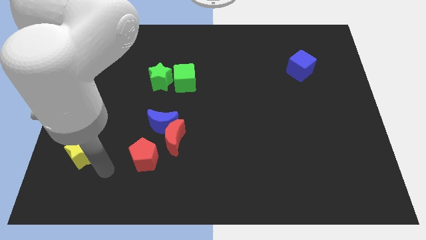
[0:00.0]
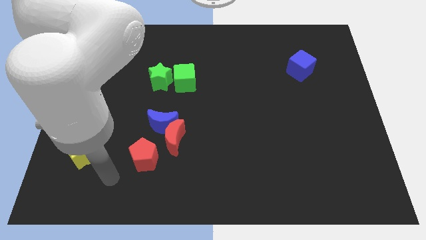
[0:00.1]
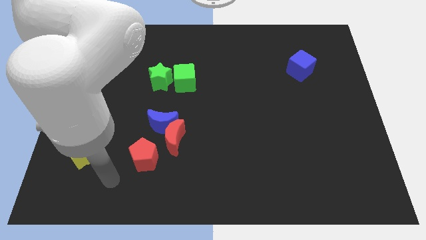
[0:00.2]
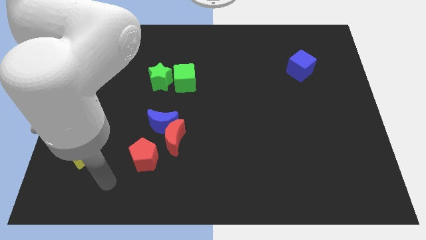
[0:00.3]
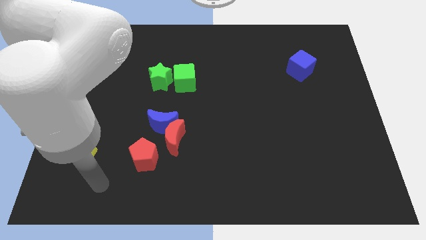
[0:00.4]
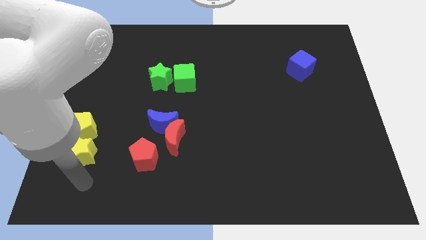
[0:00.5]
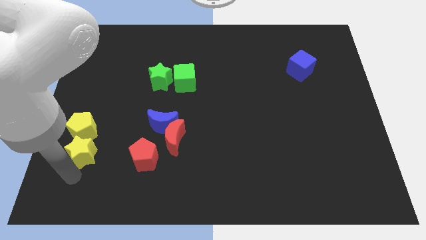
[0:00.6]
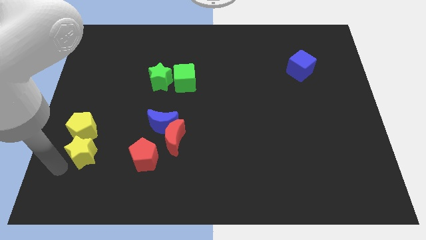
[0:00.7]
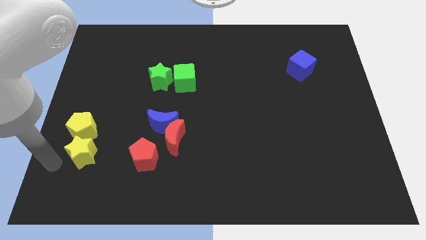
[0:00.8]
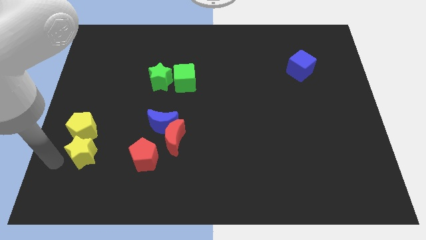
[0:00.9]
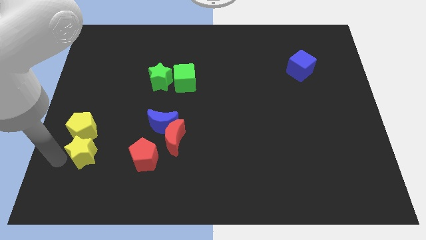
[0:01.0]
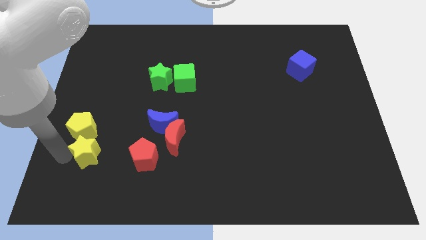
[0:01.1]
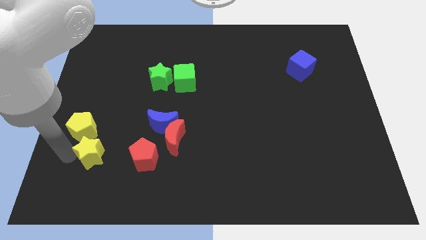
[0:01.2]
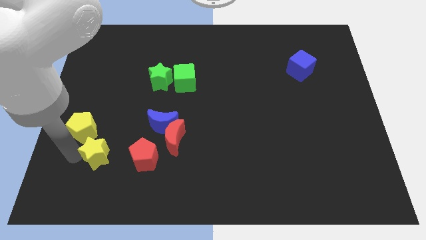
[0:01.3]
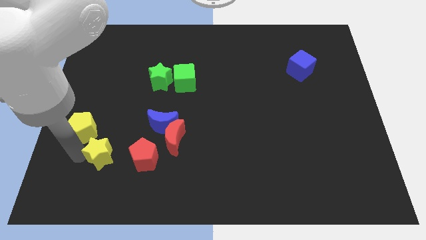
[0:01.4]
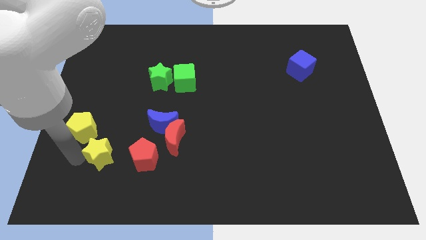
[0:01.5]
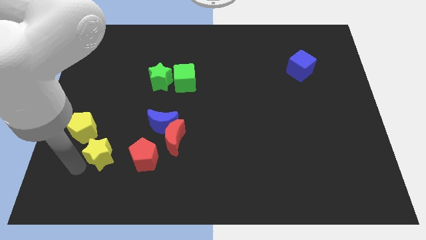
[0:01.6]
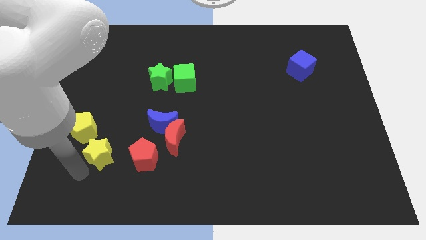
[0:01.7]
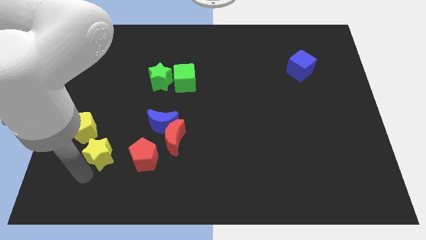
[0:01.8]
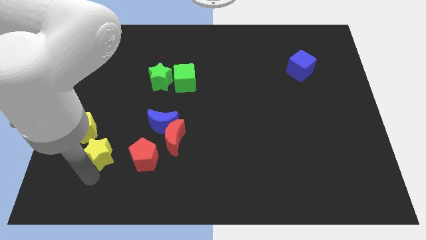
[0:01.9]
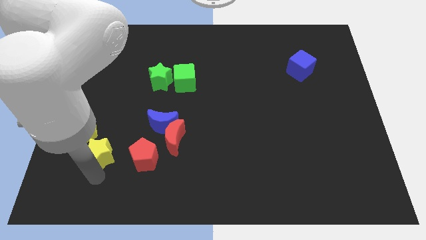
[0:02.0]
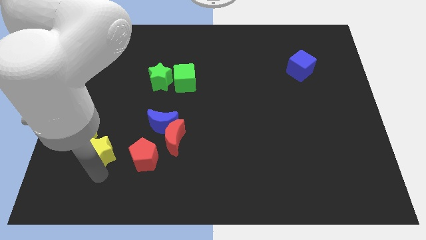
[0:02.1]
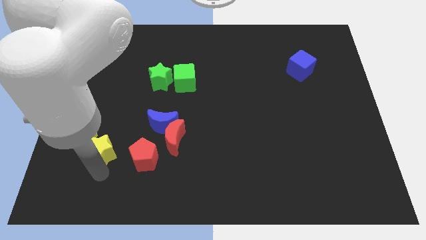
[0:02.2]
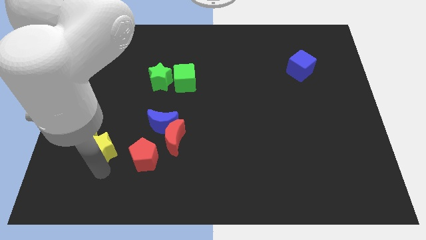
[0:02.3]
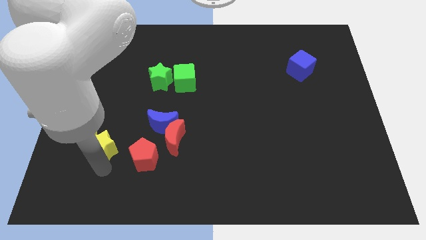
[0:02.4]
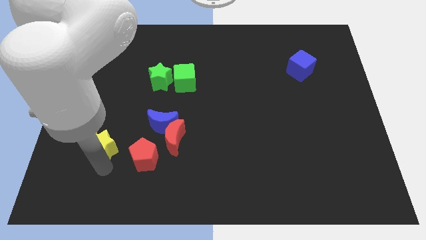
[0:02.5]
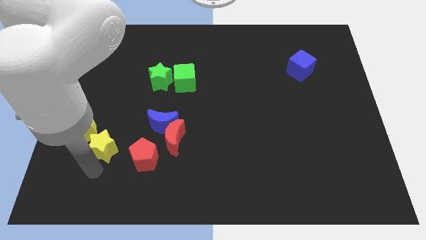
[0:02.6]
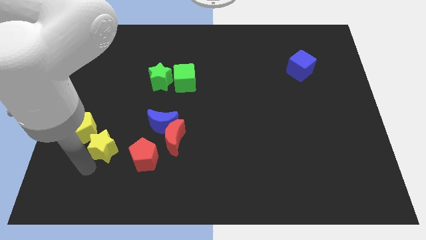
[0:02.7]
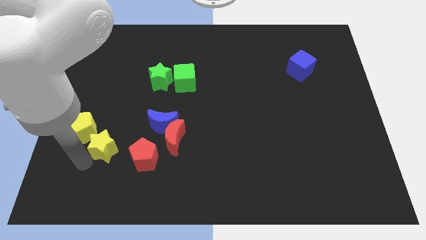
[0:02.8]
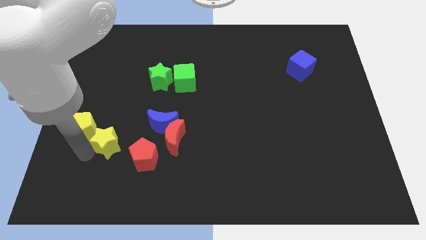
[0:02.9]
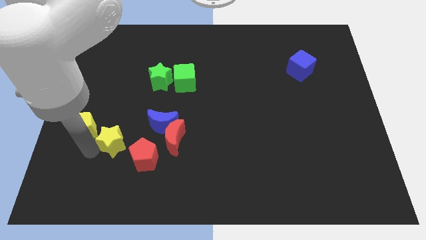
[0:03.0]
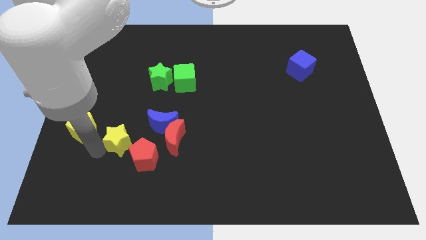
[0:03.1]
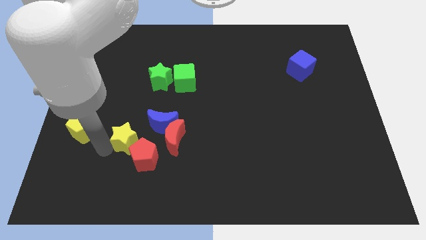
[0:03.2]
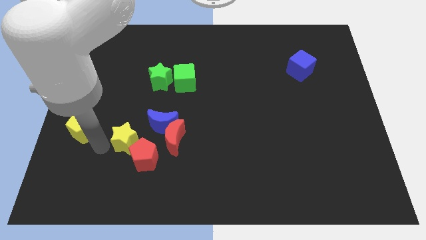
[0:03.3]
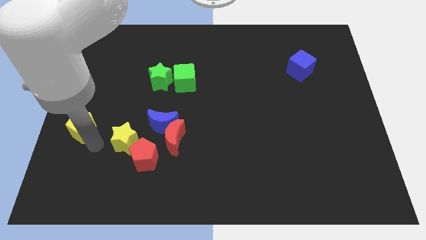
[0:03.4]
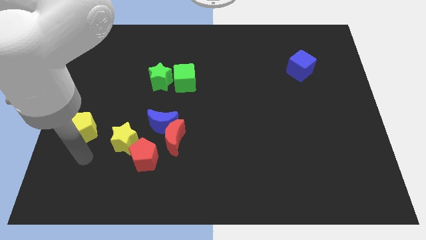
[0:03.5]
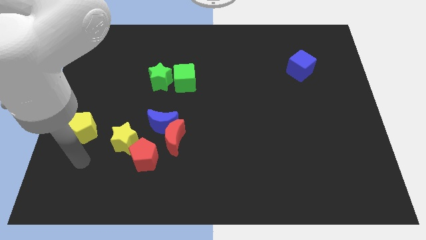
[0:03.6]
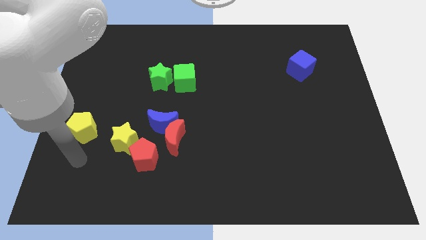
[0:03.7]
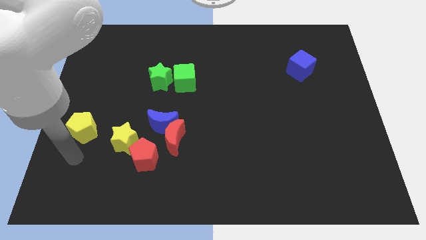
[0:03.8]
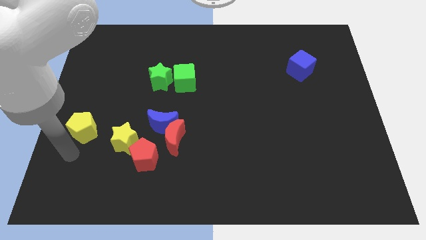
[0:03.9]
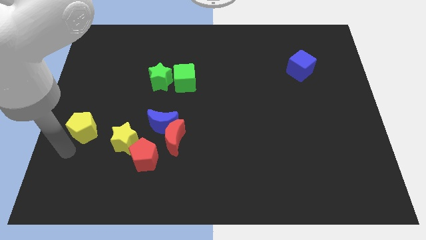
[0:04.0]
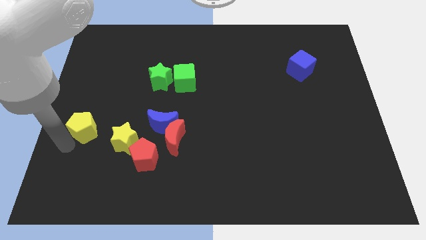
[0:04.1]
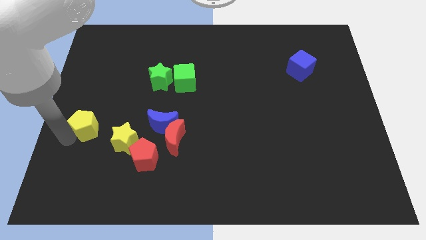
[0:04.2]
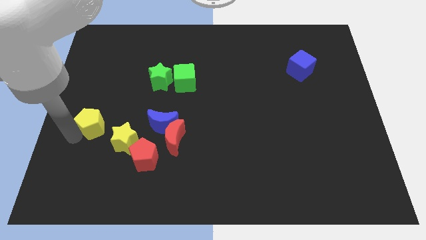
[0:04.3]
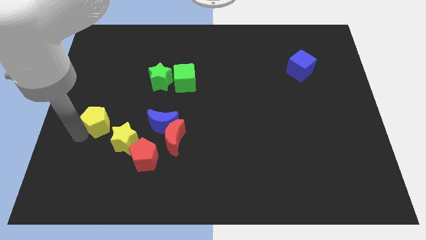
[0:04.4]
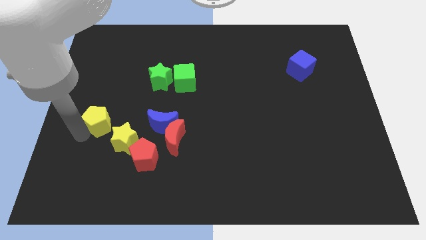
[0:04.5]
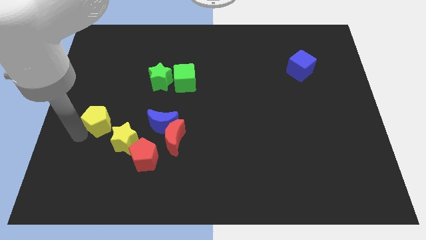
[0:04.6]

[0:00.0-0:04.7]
push the yellow star between yellow pentagon and red pentagon

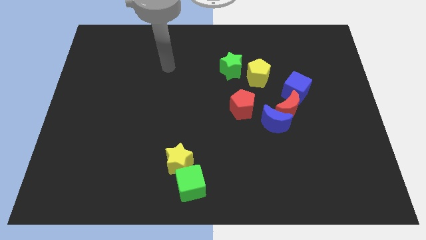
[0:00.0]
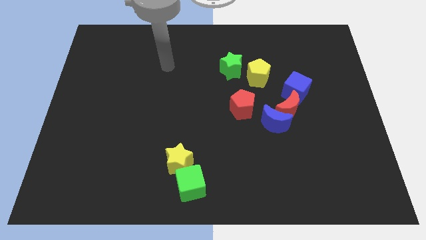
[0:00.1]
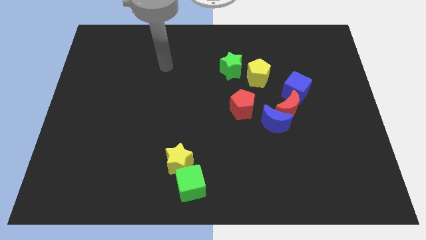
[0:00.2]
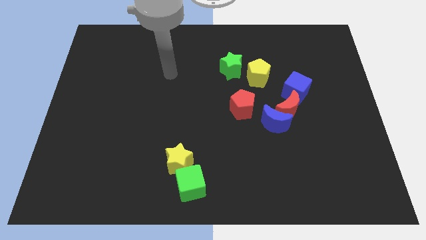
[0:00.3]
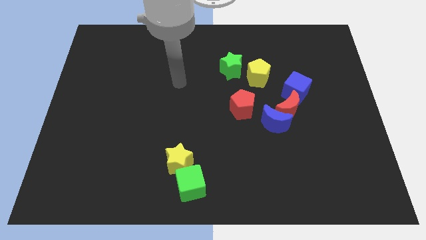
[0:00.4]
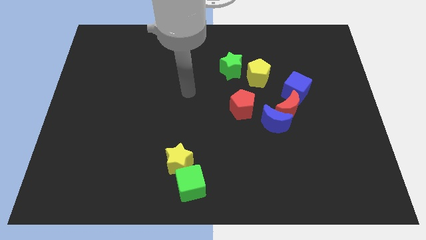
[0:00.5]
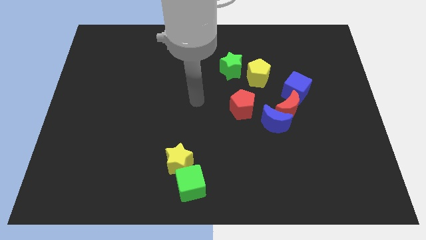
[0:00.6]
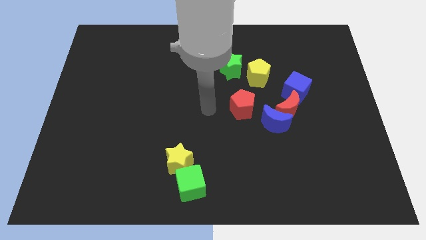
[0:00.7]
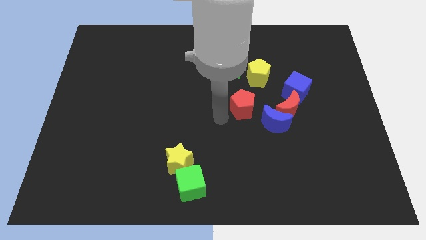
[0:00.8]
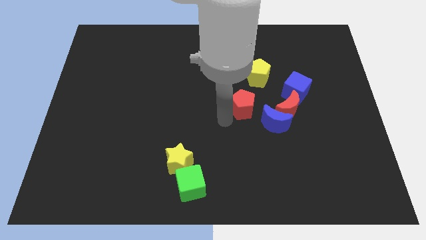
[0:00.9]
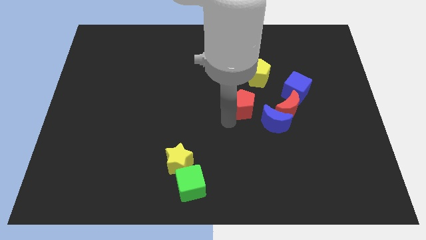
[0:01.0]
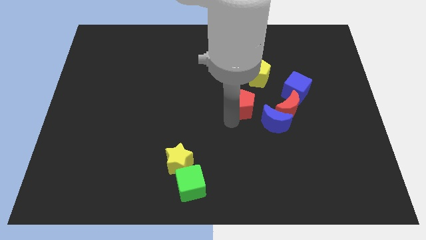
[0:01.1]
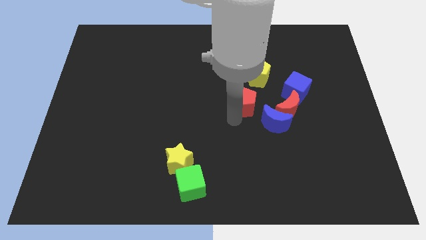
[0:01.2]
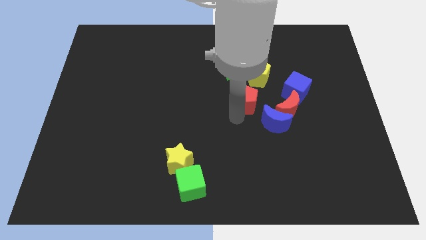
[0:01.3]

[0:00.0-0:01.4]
tap the bottom left of the red pentagon

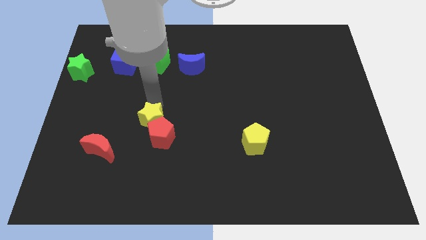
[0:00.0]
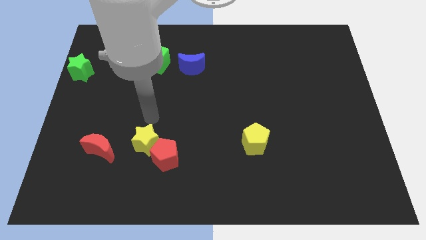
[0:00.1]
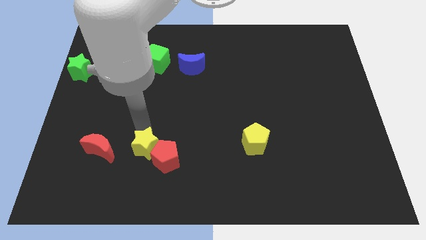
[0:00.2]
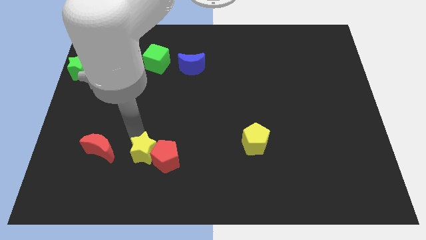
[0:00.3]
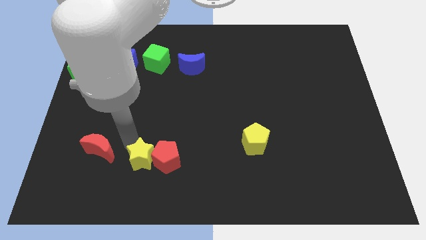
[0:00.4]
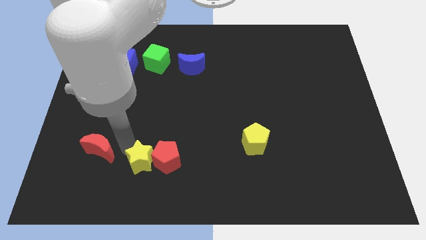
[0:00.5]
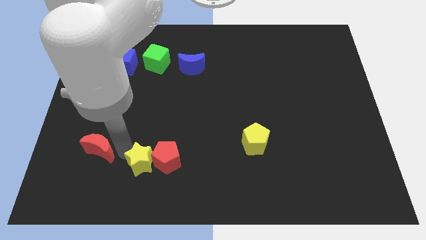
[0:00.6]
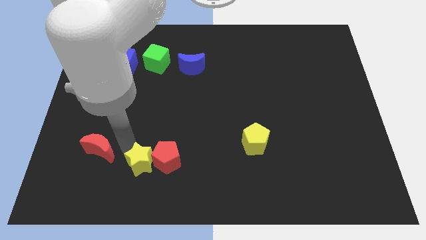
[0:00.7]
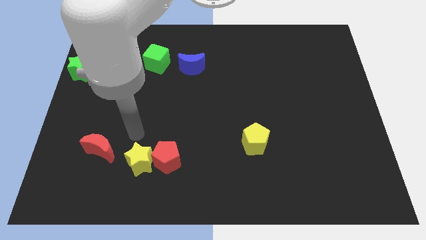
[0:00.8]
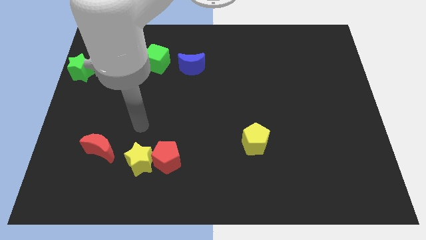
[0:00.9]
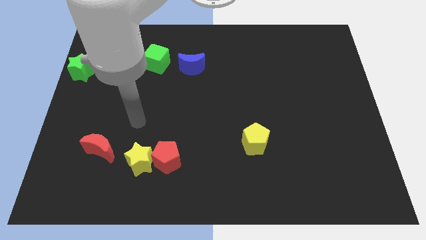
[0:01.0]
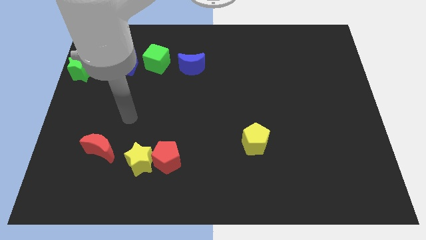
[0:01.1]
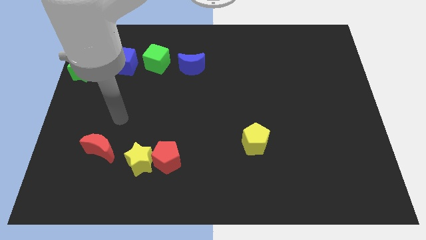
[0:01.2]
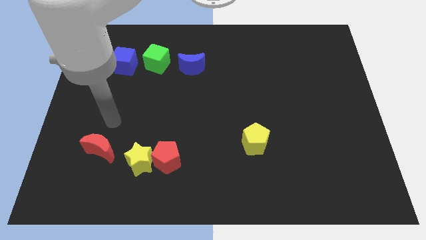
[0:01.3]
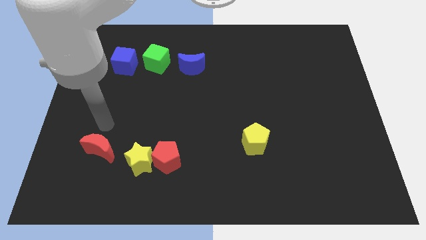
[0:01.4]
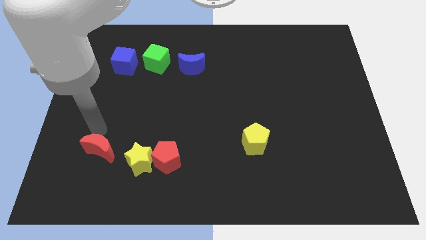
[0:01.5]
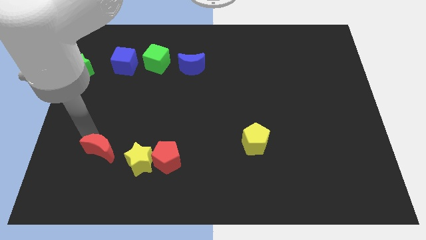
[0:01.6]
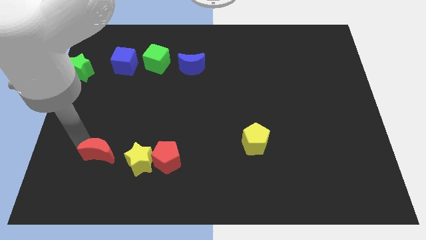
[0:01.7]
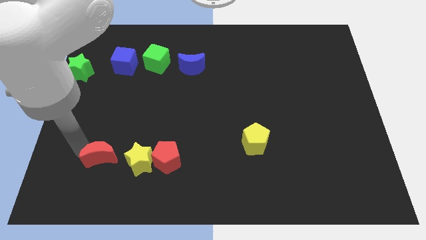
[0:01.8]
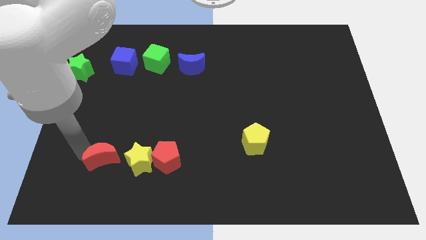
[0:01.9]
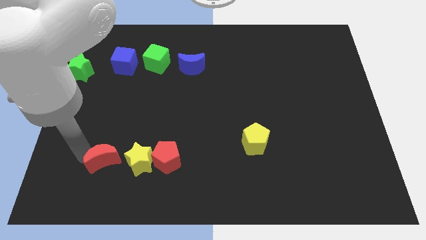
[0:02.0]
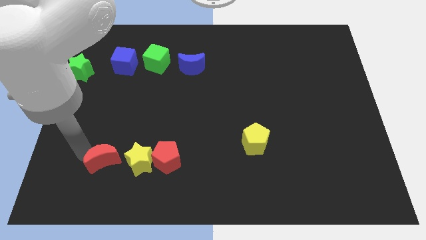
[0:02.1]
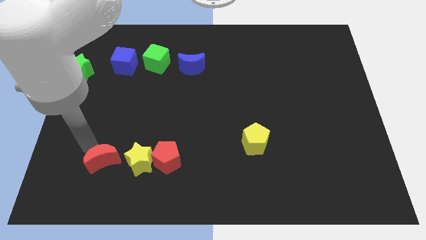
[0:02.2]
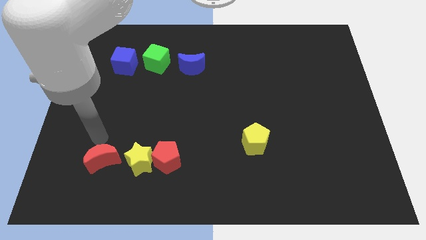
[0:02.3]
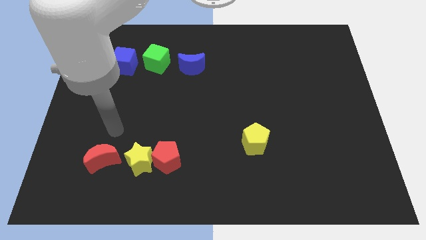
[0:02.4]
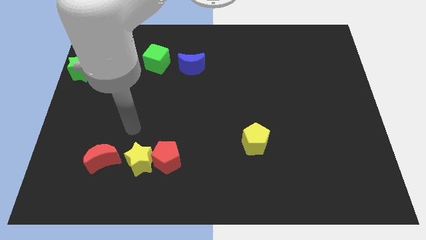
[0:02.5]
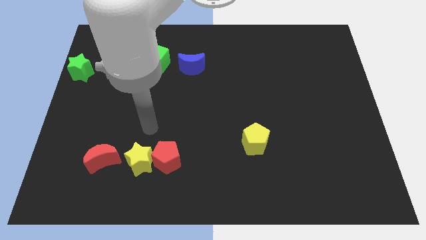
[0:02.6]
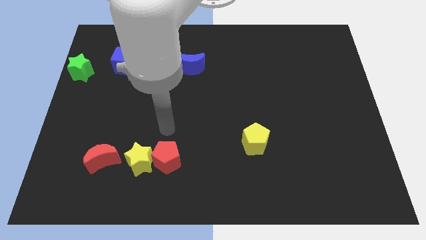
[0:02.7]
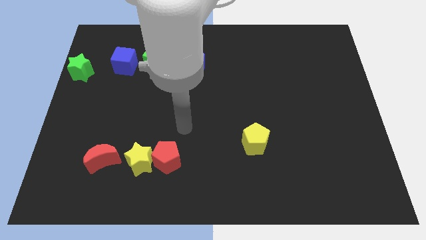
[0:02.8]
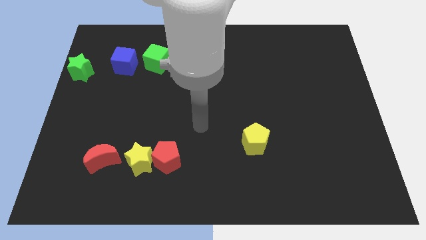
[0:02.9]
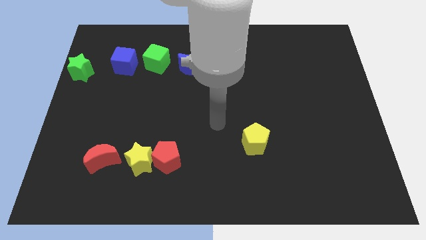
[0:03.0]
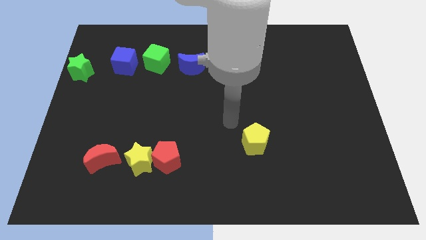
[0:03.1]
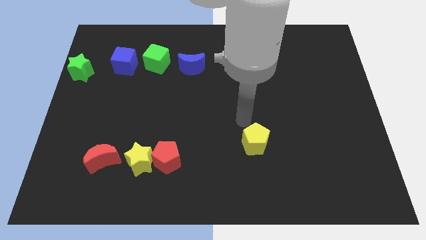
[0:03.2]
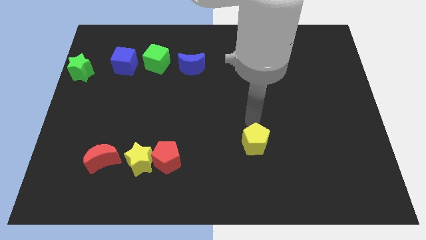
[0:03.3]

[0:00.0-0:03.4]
slightly push the red moon closer to yellow star at bottom left corner
